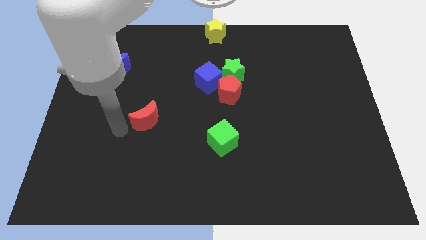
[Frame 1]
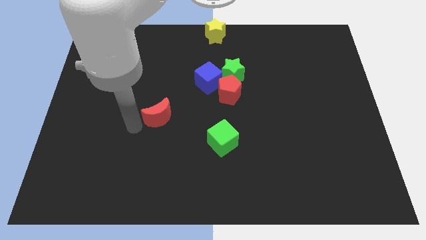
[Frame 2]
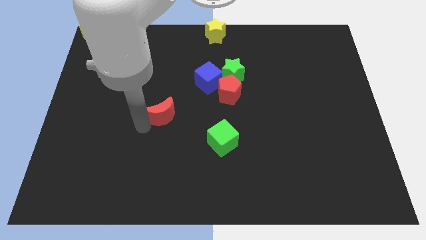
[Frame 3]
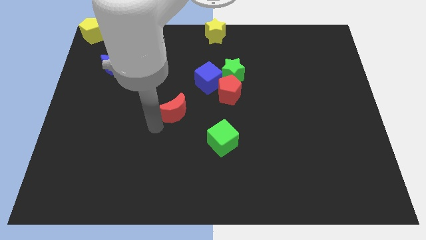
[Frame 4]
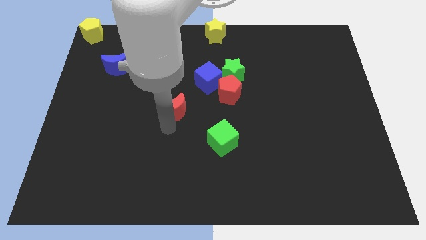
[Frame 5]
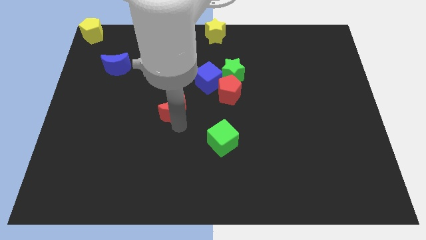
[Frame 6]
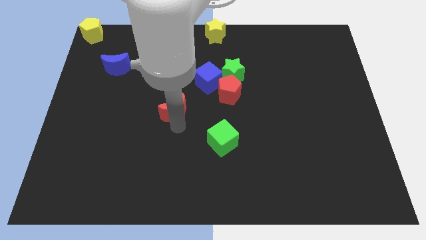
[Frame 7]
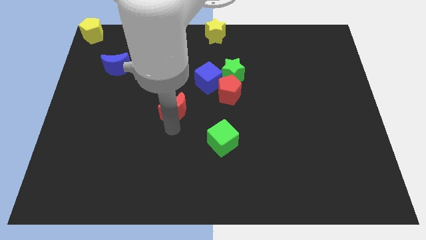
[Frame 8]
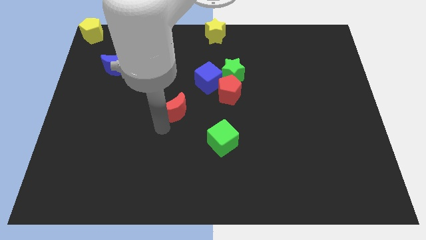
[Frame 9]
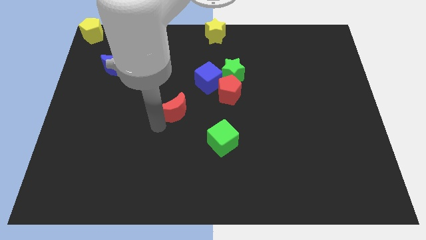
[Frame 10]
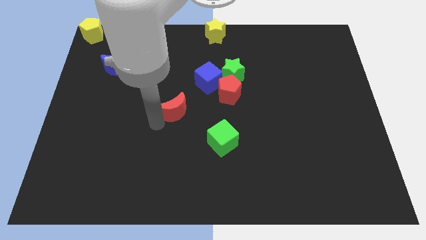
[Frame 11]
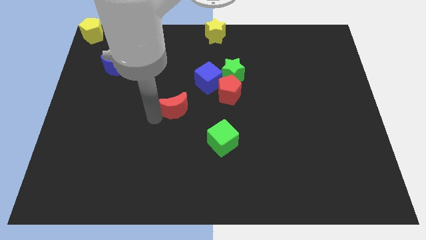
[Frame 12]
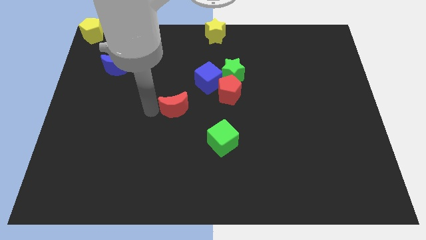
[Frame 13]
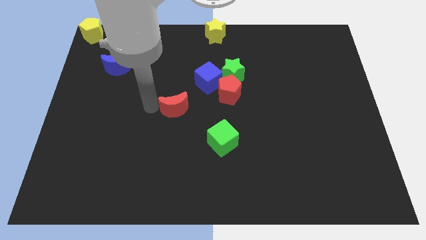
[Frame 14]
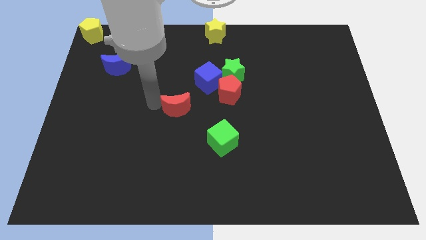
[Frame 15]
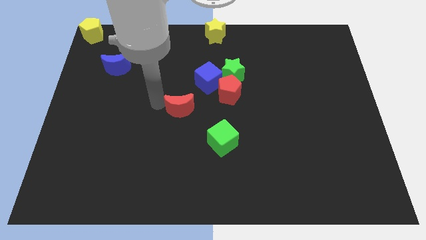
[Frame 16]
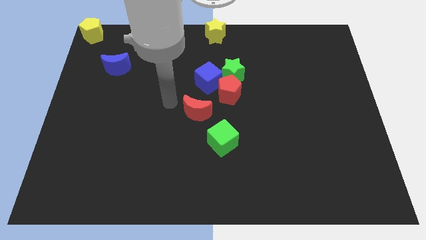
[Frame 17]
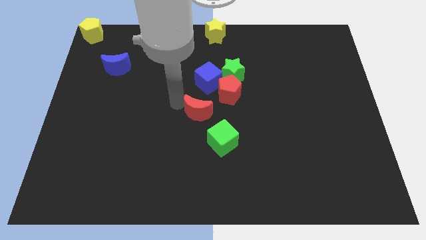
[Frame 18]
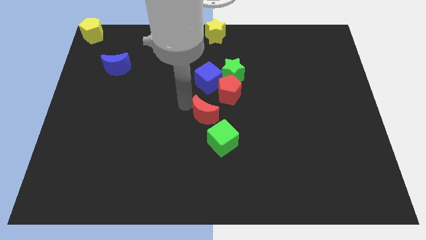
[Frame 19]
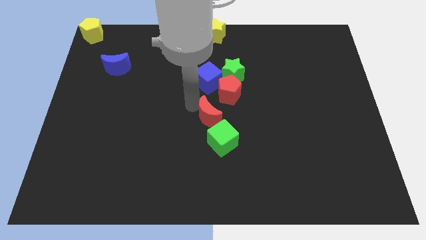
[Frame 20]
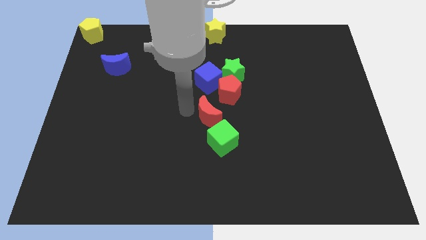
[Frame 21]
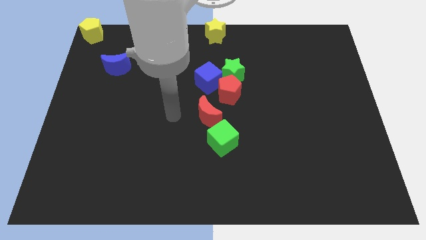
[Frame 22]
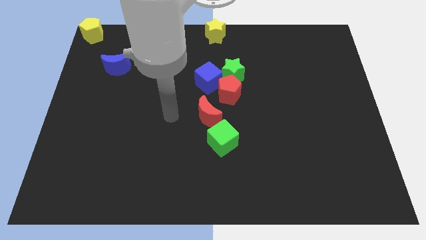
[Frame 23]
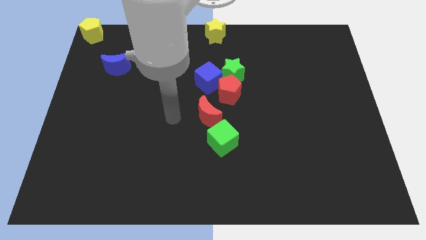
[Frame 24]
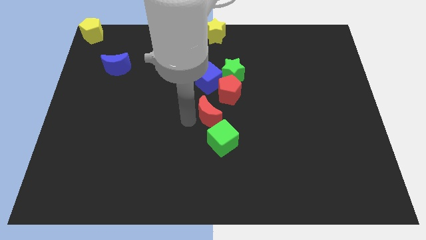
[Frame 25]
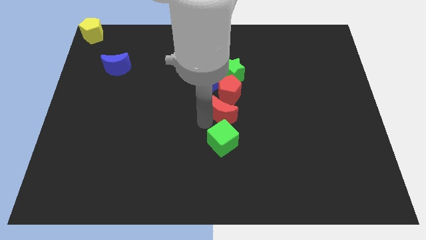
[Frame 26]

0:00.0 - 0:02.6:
put the red moon in between the red pentagon and green cube

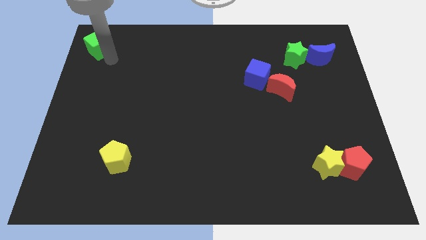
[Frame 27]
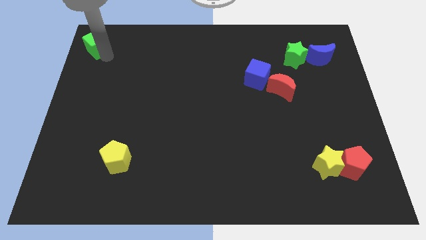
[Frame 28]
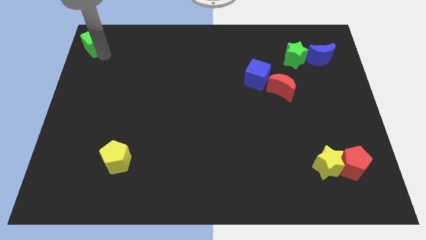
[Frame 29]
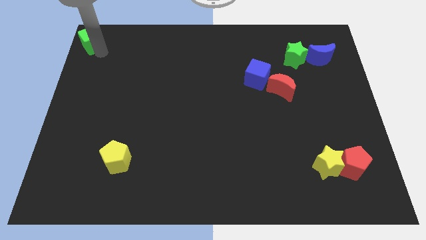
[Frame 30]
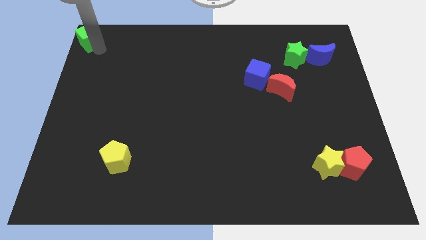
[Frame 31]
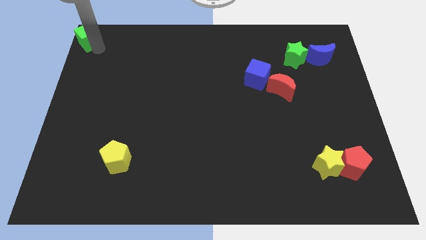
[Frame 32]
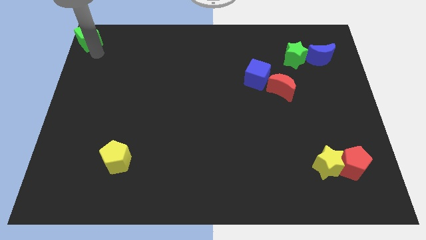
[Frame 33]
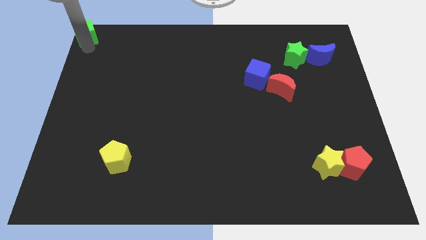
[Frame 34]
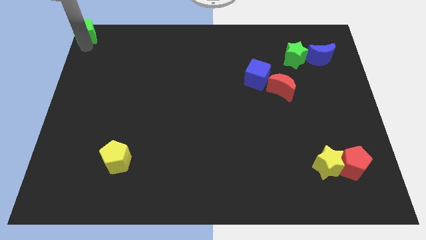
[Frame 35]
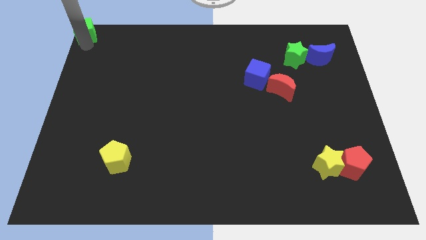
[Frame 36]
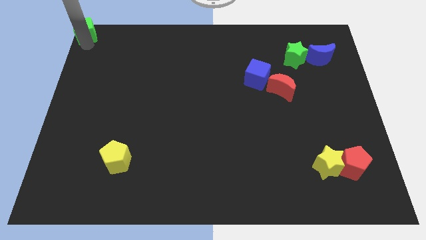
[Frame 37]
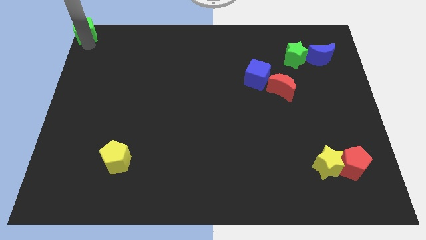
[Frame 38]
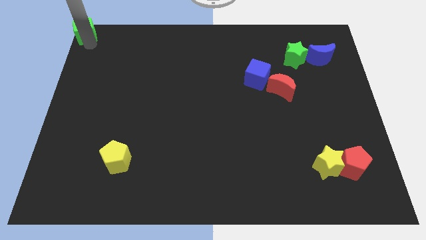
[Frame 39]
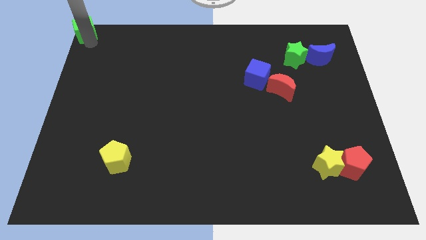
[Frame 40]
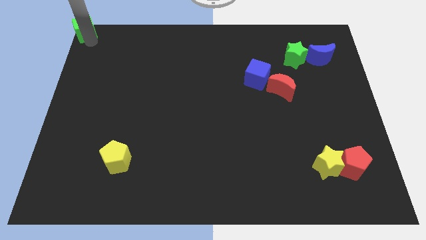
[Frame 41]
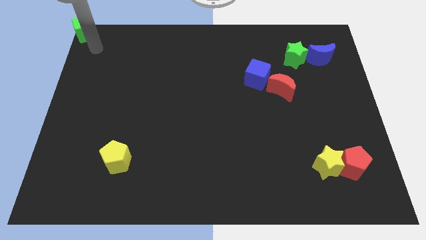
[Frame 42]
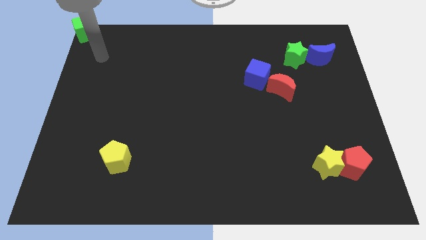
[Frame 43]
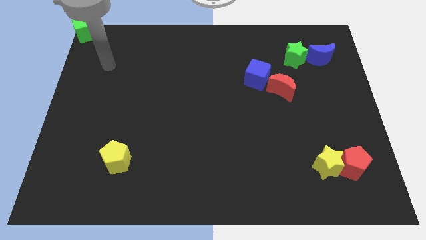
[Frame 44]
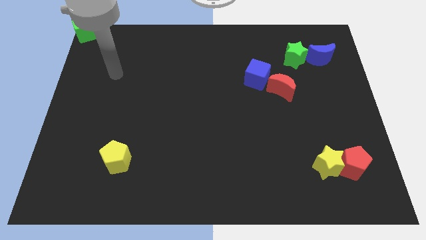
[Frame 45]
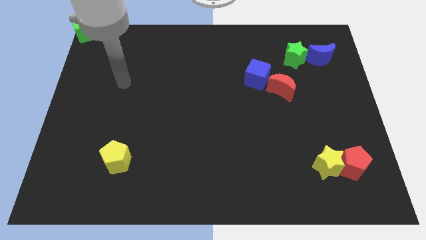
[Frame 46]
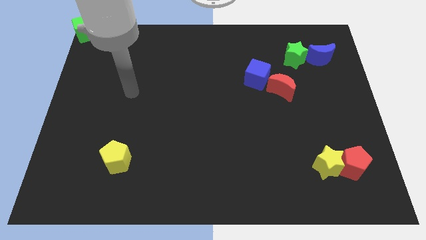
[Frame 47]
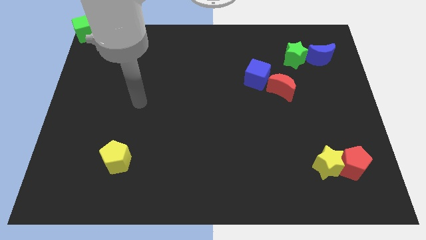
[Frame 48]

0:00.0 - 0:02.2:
place the green cube to the top left

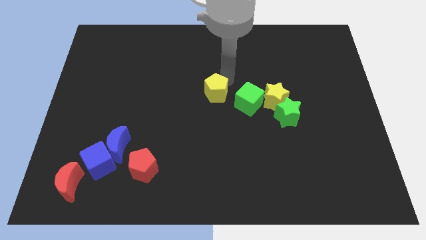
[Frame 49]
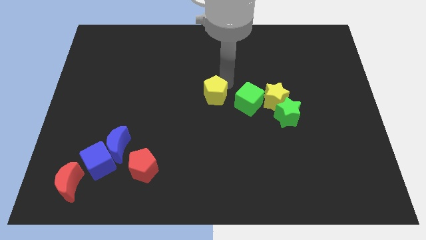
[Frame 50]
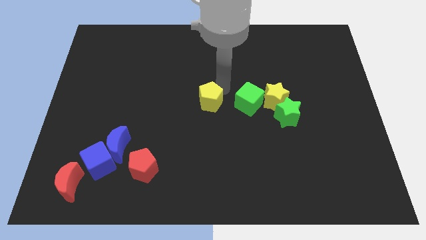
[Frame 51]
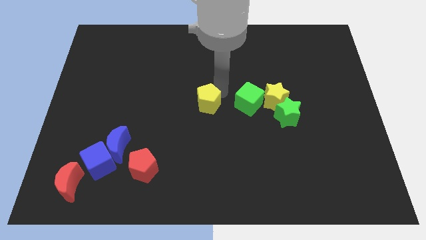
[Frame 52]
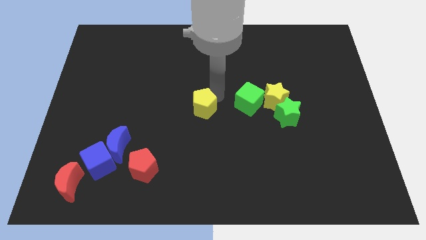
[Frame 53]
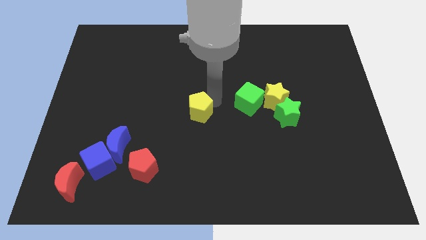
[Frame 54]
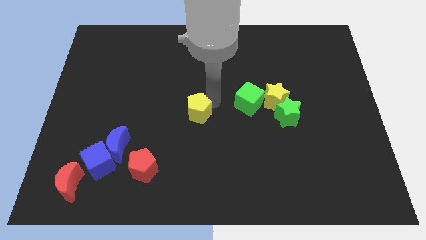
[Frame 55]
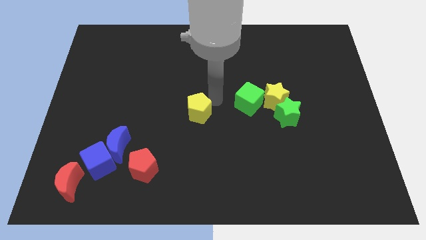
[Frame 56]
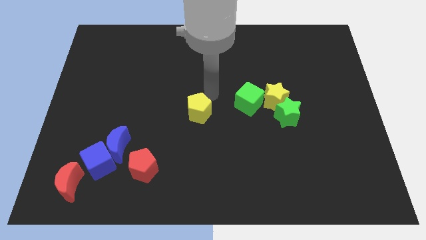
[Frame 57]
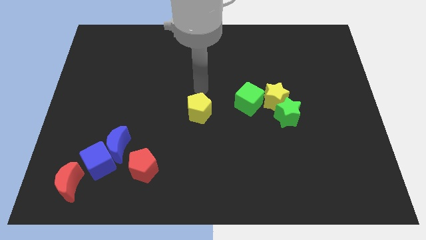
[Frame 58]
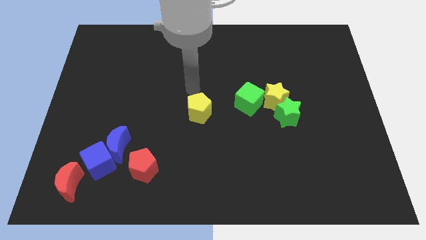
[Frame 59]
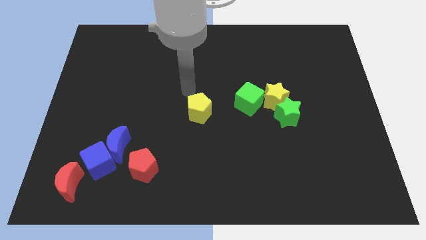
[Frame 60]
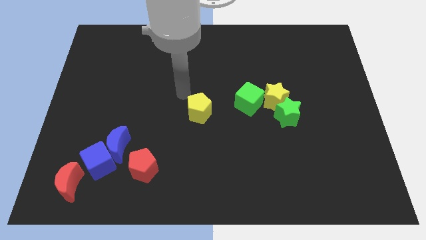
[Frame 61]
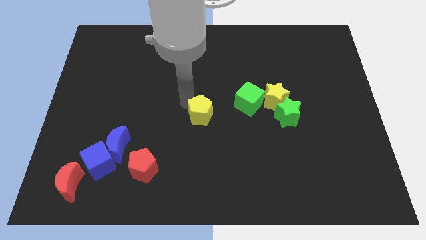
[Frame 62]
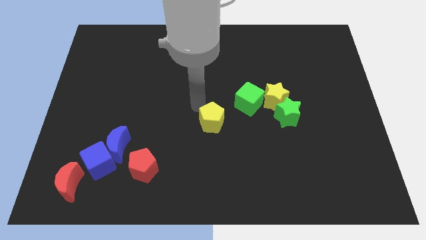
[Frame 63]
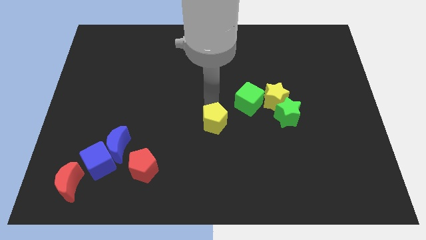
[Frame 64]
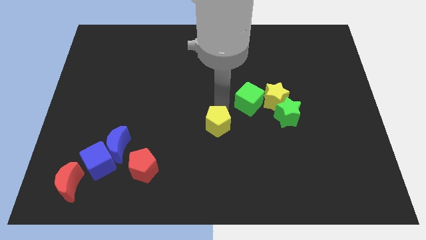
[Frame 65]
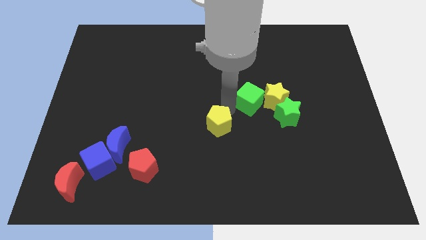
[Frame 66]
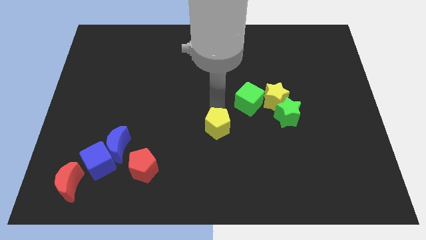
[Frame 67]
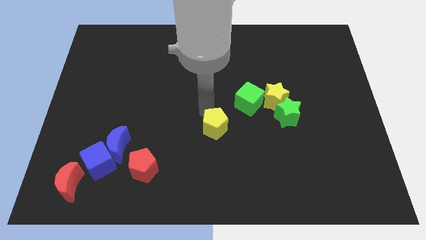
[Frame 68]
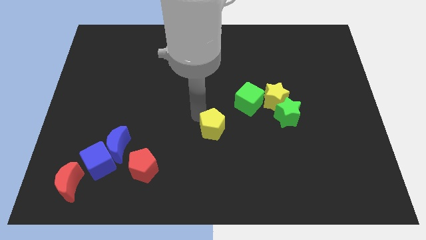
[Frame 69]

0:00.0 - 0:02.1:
place the yellow pentagon diagonally in between the green cube and red pentagon

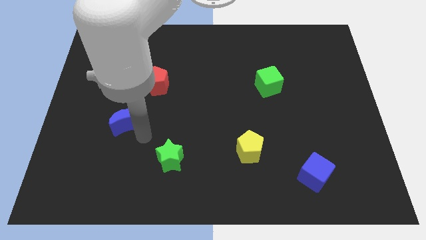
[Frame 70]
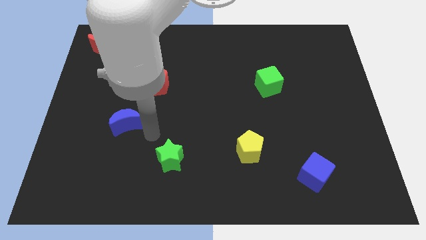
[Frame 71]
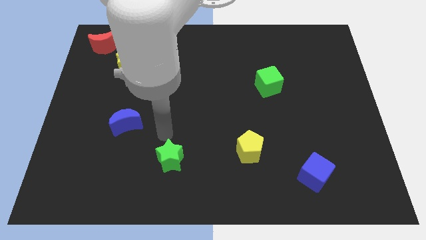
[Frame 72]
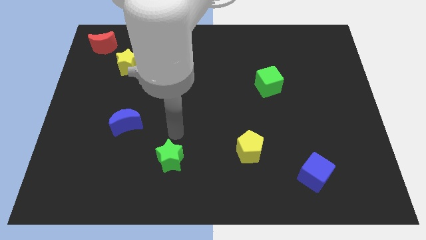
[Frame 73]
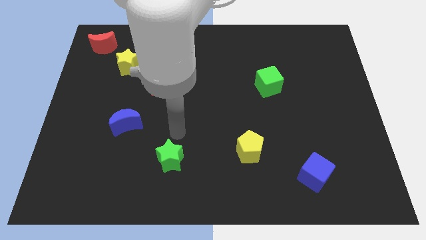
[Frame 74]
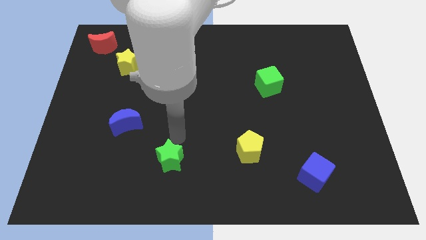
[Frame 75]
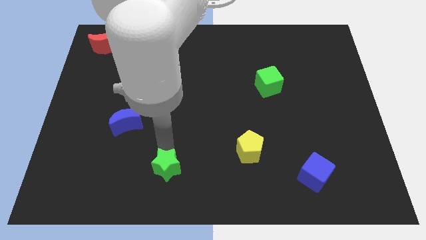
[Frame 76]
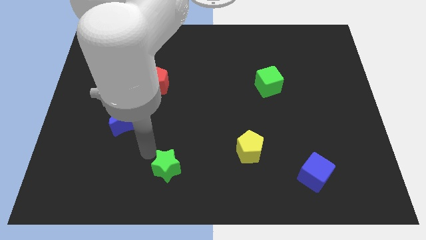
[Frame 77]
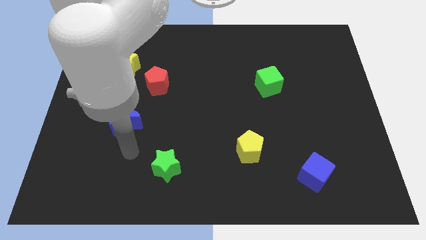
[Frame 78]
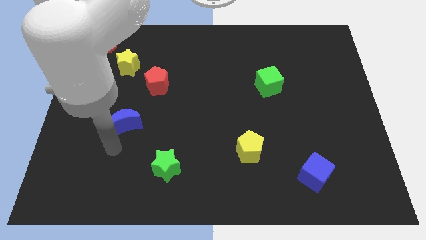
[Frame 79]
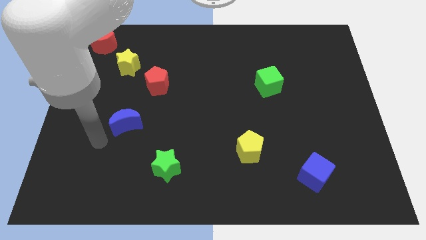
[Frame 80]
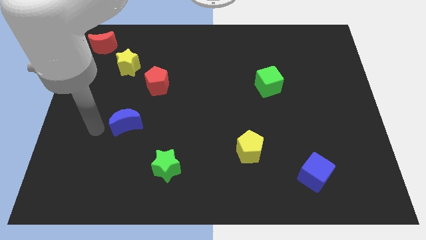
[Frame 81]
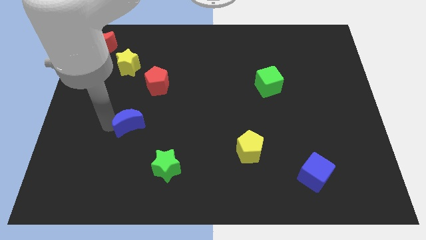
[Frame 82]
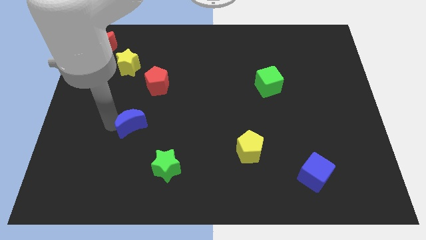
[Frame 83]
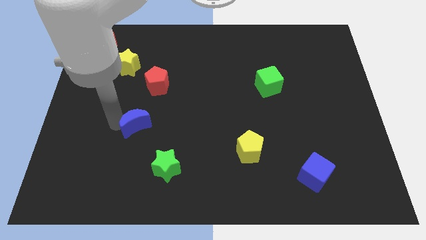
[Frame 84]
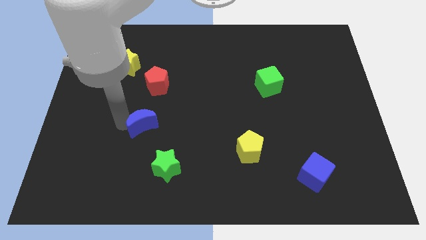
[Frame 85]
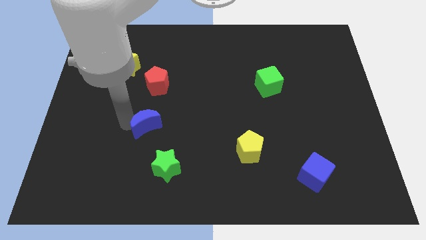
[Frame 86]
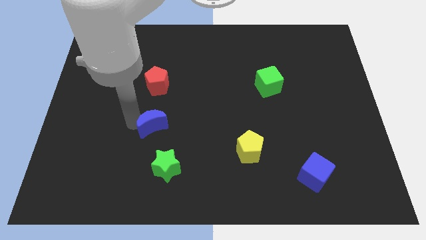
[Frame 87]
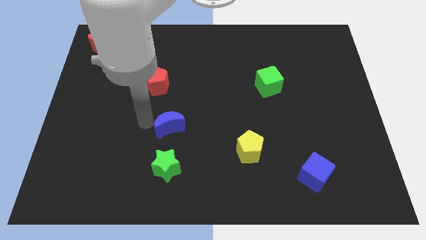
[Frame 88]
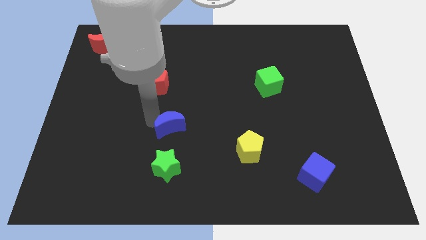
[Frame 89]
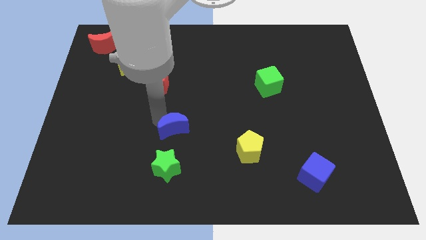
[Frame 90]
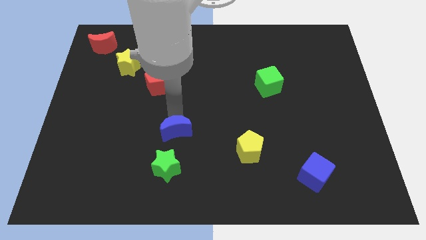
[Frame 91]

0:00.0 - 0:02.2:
place blue crescent on top of green star

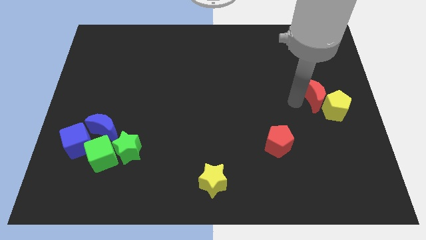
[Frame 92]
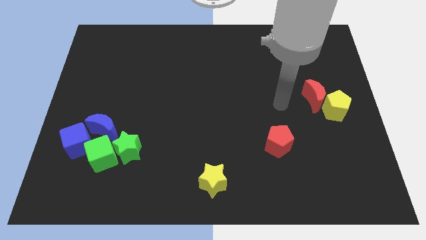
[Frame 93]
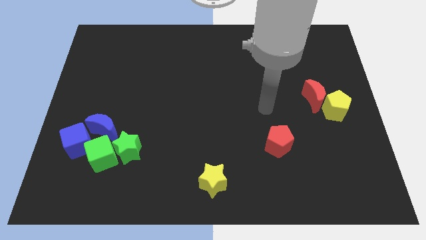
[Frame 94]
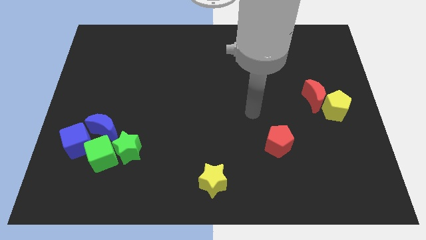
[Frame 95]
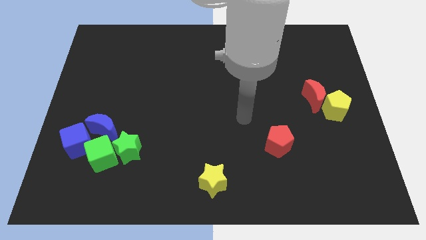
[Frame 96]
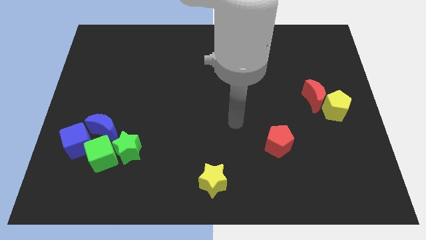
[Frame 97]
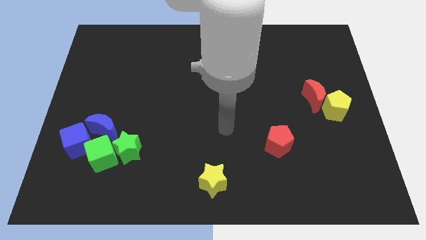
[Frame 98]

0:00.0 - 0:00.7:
move the arm away from the red moon
